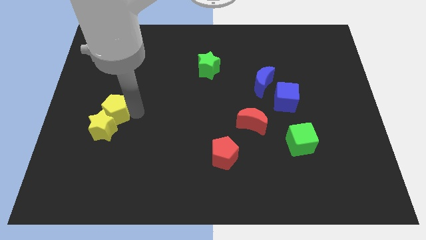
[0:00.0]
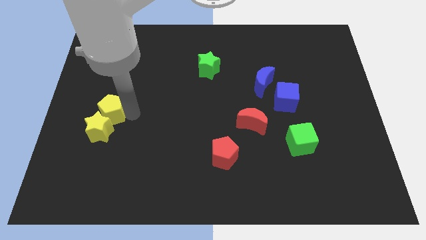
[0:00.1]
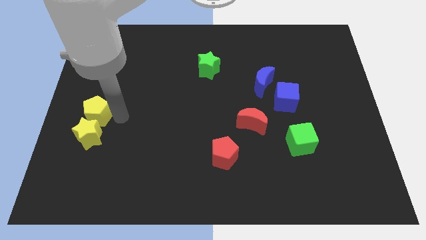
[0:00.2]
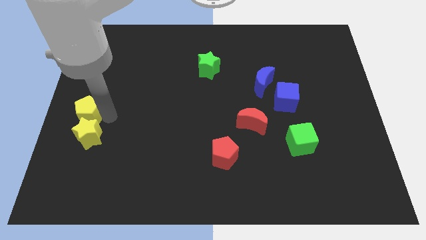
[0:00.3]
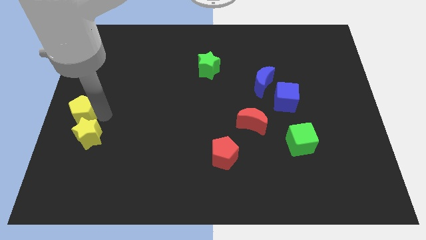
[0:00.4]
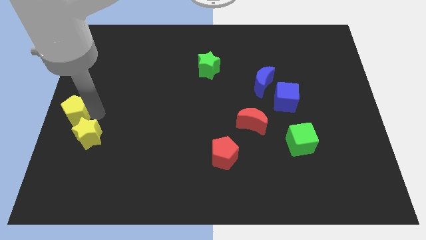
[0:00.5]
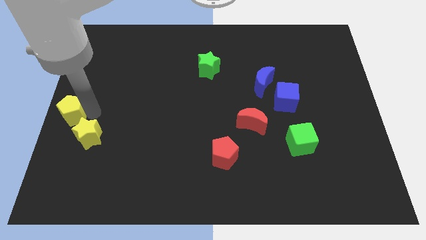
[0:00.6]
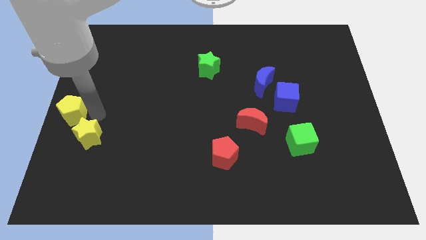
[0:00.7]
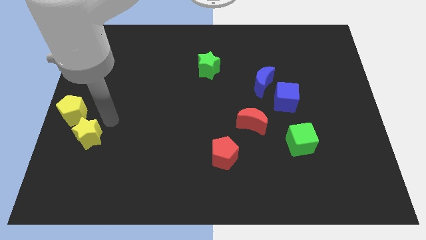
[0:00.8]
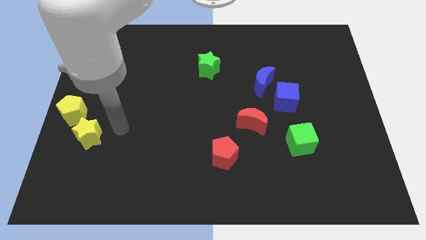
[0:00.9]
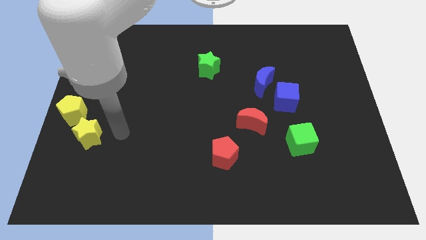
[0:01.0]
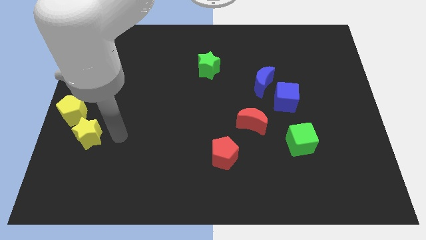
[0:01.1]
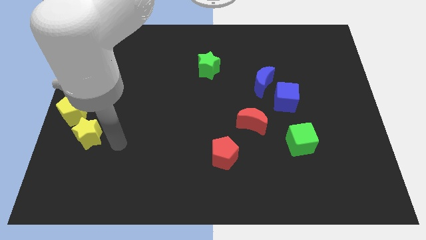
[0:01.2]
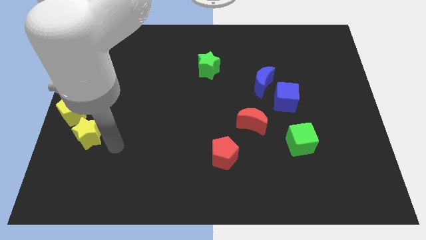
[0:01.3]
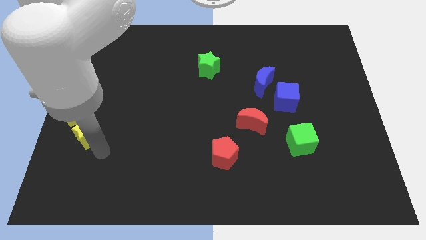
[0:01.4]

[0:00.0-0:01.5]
push the yellow pentagon to the left side center of the board

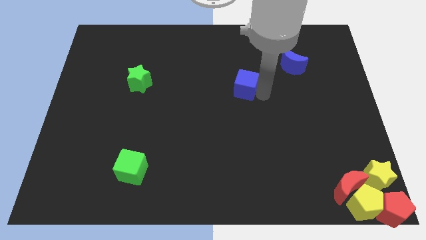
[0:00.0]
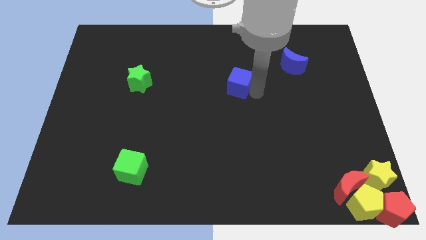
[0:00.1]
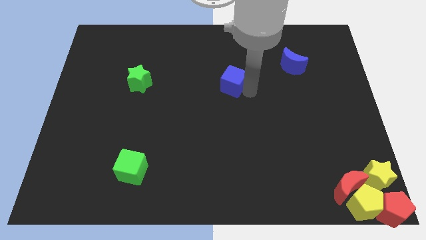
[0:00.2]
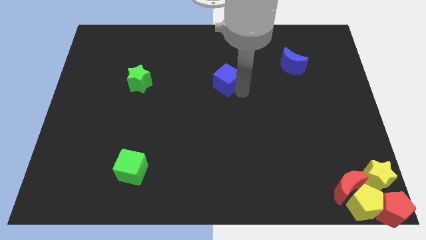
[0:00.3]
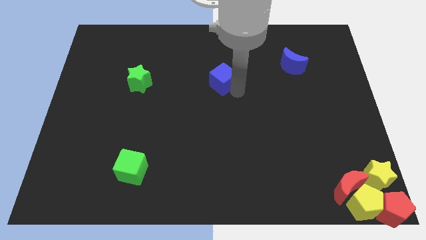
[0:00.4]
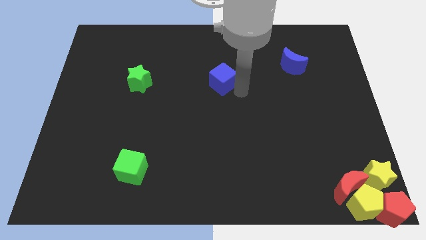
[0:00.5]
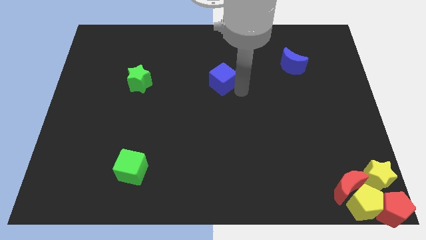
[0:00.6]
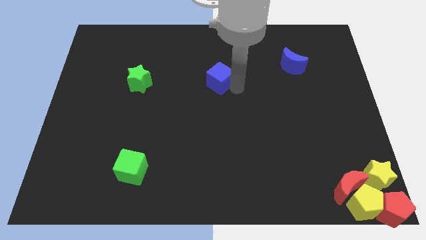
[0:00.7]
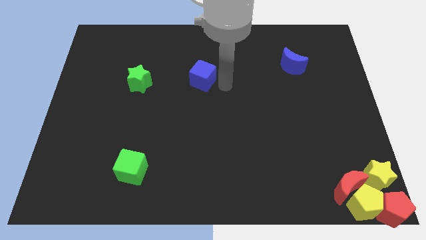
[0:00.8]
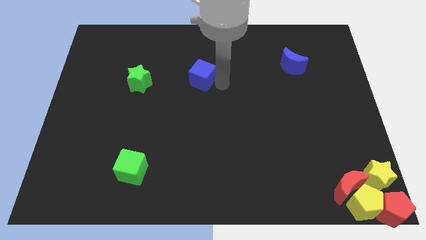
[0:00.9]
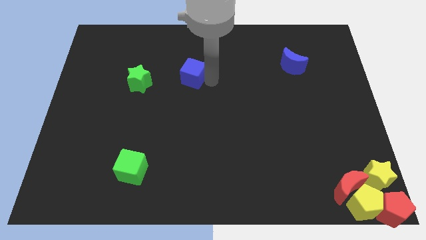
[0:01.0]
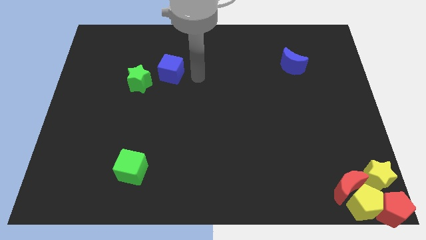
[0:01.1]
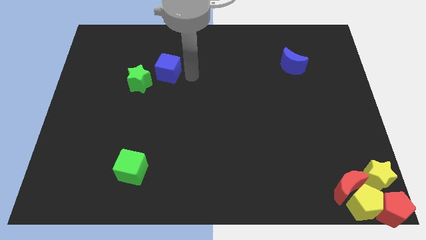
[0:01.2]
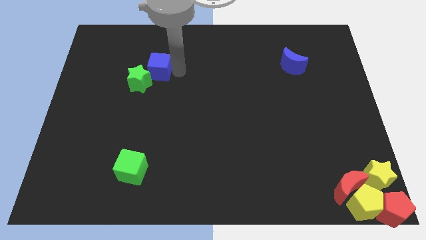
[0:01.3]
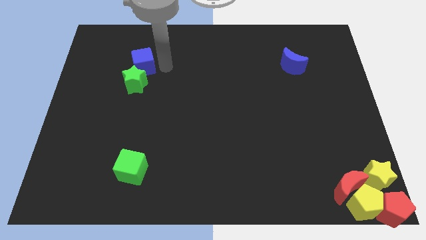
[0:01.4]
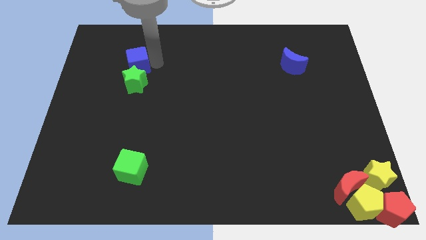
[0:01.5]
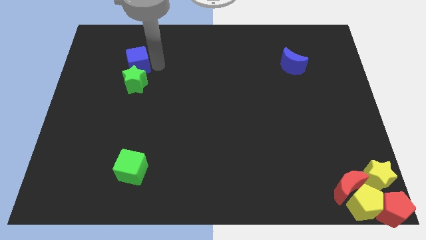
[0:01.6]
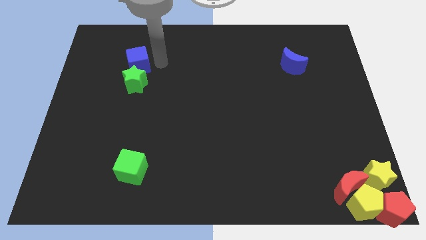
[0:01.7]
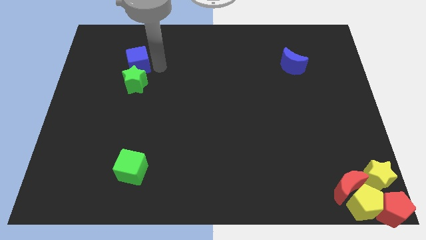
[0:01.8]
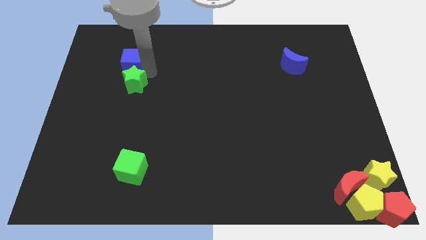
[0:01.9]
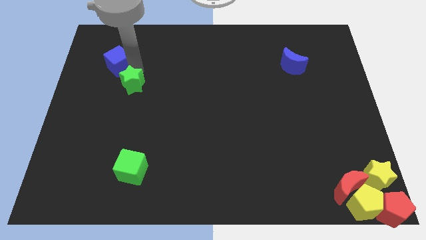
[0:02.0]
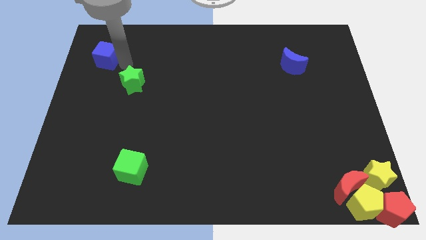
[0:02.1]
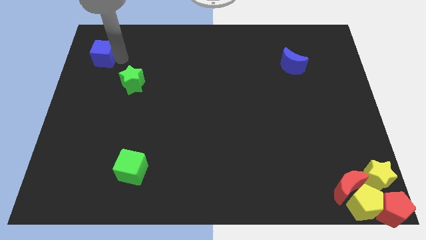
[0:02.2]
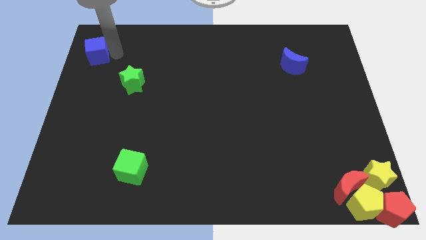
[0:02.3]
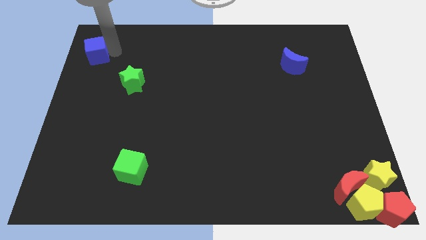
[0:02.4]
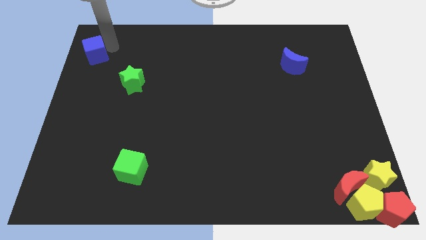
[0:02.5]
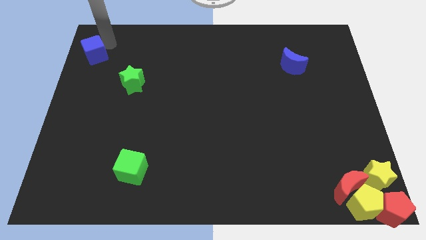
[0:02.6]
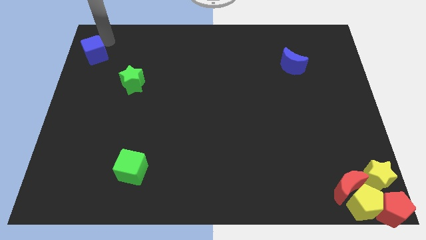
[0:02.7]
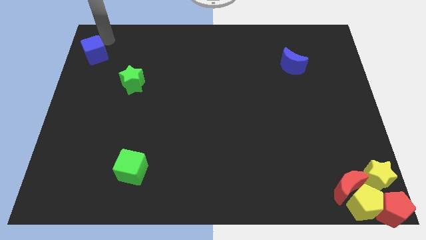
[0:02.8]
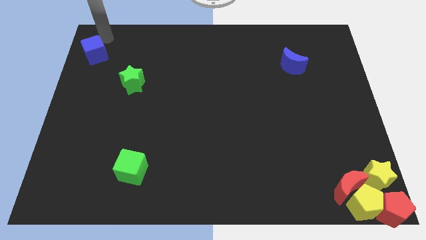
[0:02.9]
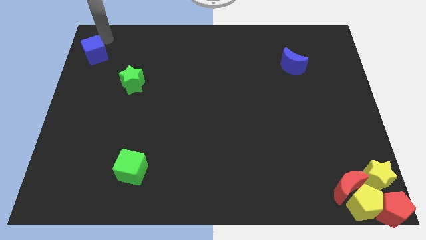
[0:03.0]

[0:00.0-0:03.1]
place the blue cube at the top left corner of the board

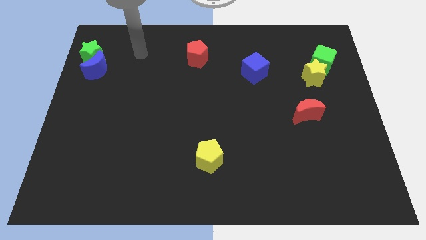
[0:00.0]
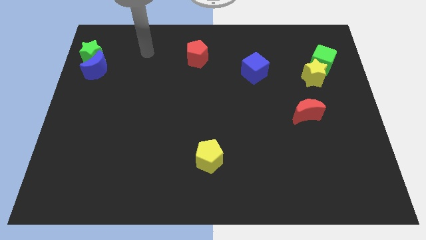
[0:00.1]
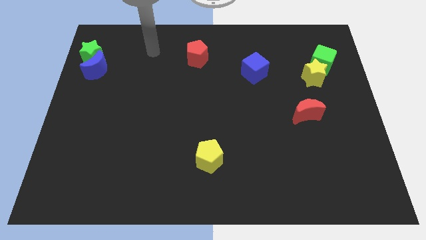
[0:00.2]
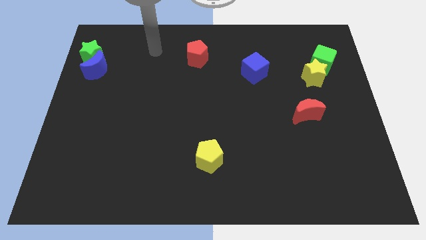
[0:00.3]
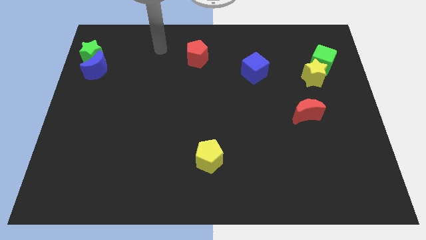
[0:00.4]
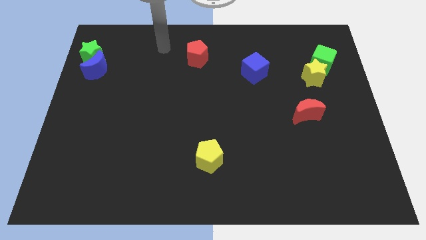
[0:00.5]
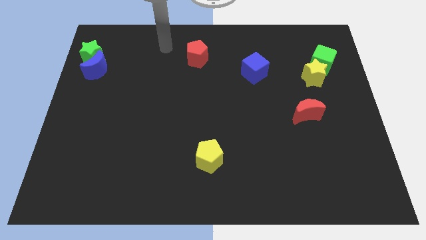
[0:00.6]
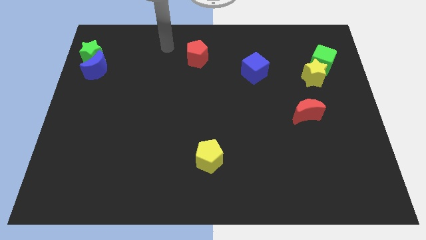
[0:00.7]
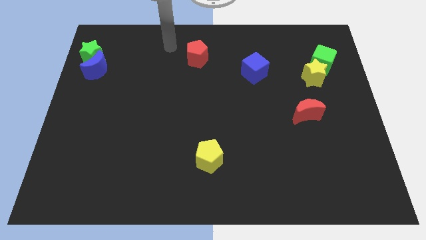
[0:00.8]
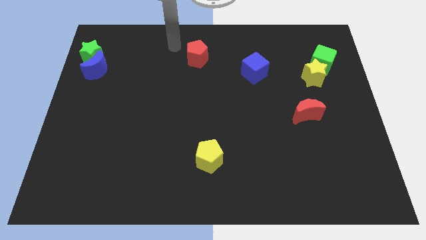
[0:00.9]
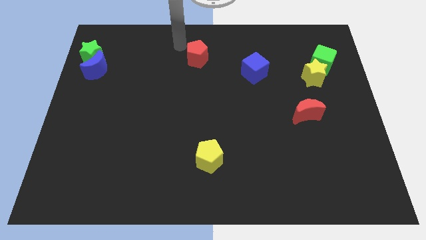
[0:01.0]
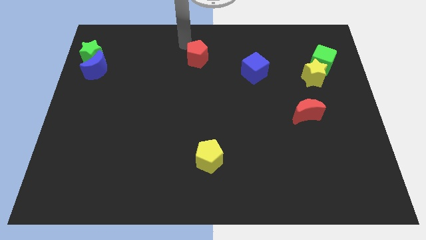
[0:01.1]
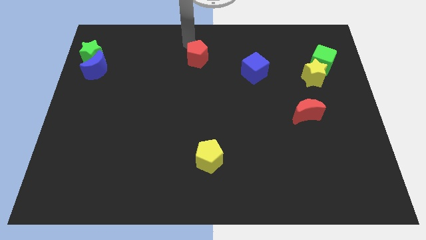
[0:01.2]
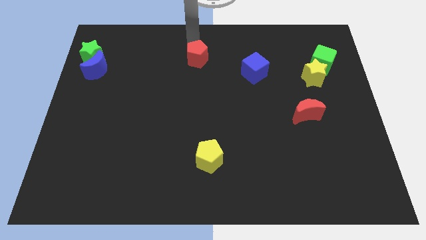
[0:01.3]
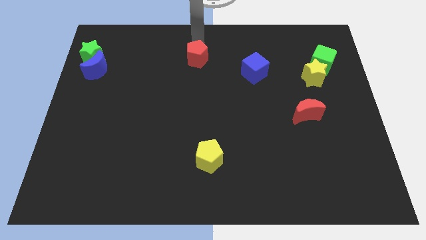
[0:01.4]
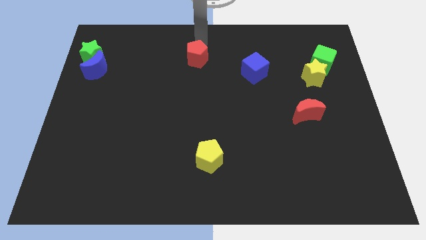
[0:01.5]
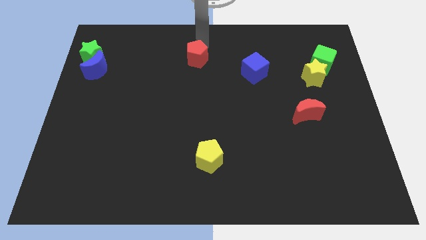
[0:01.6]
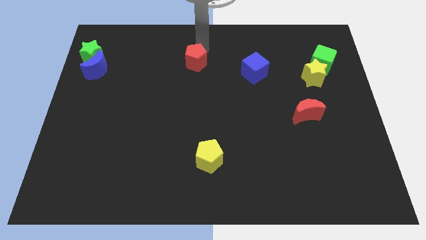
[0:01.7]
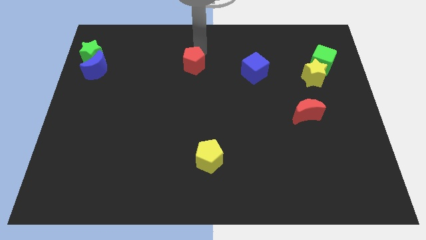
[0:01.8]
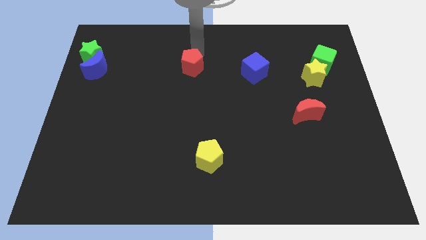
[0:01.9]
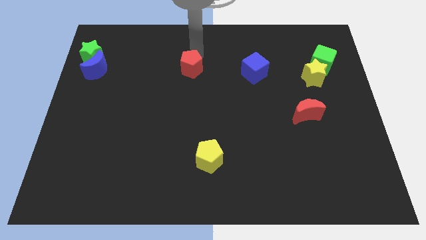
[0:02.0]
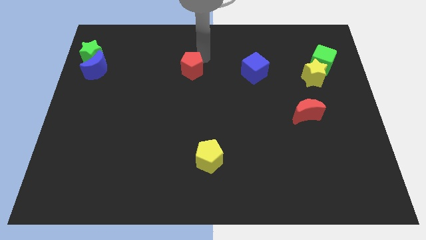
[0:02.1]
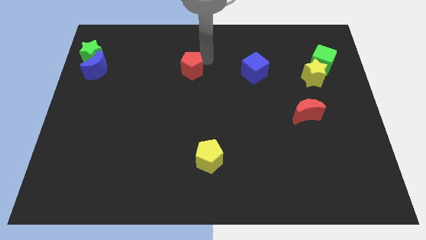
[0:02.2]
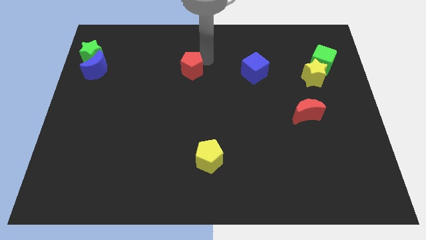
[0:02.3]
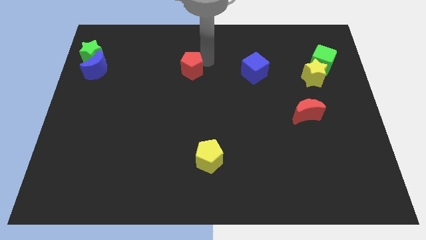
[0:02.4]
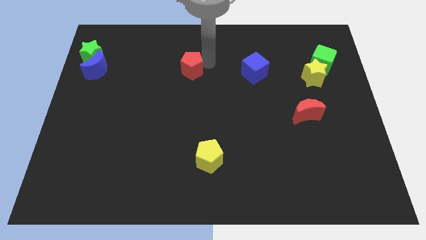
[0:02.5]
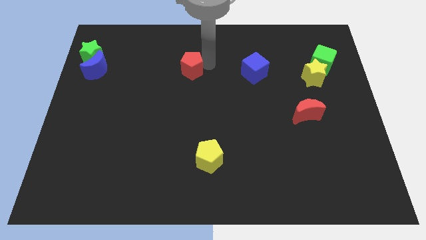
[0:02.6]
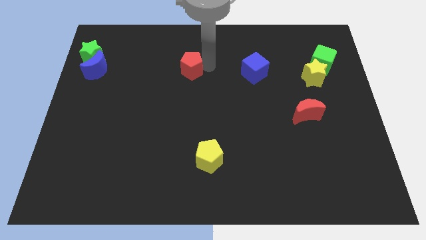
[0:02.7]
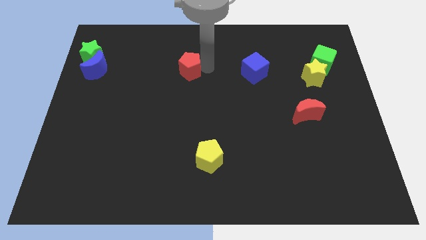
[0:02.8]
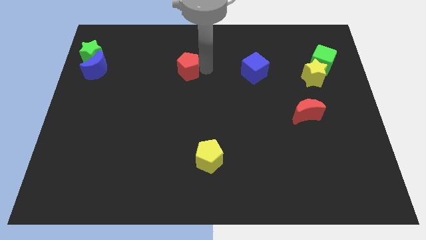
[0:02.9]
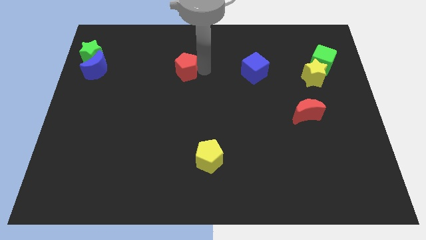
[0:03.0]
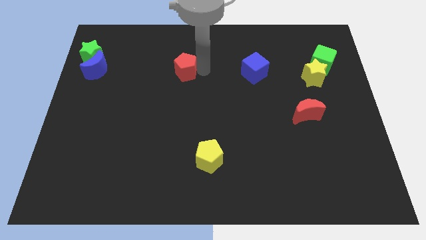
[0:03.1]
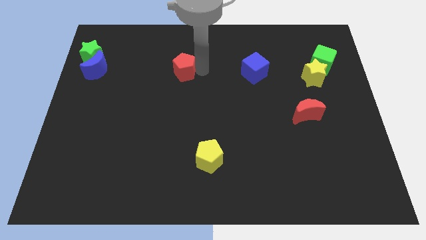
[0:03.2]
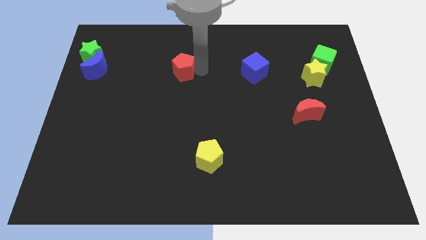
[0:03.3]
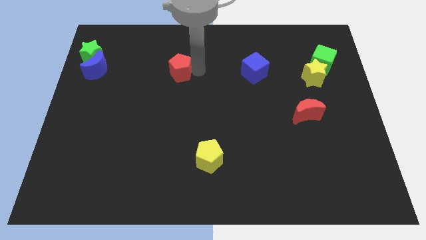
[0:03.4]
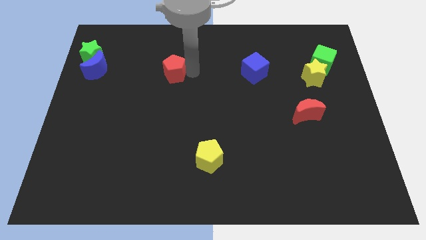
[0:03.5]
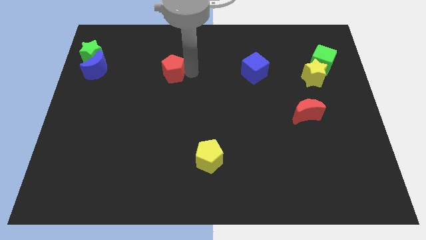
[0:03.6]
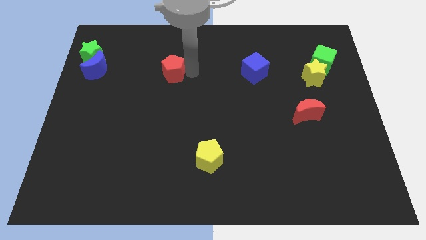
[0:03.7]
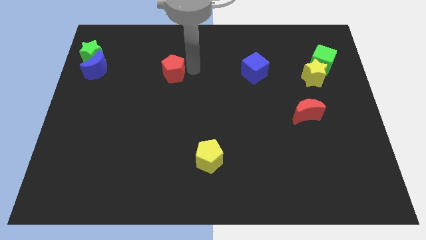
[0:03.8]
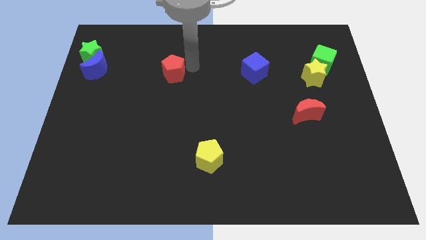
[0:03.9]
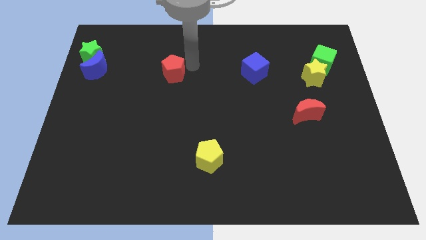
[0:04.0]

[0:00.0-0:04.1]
move the red pentagon in between the blue cube and blue crescent

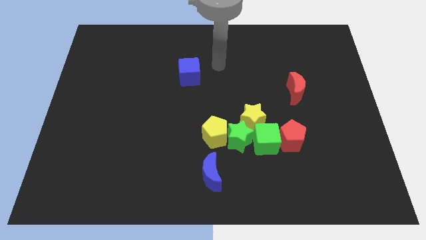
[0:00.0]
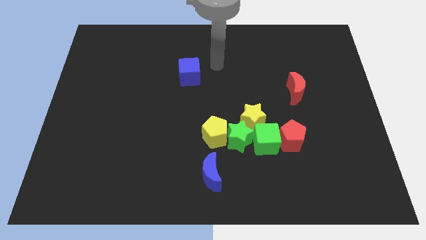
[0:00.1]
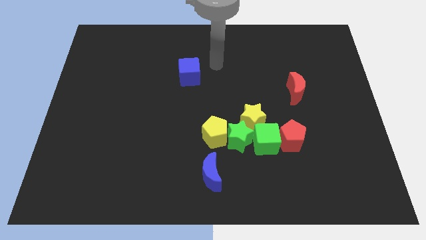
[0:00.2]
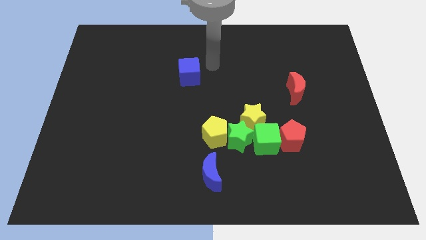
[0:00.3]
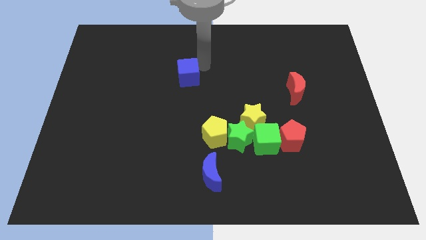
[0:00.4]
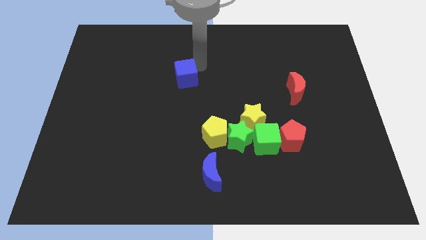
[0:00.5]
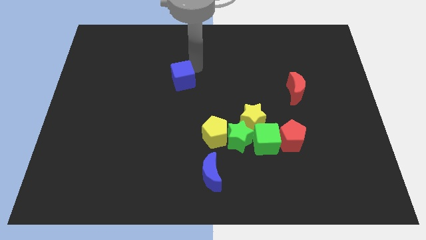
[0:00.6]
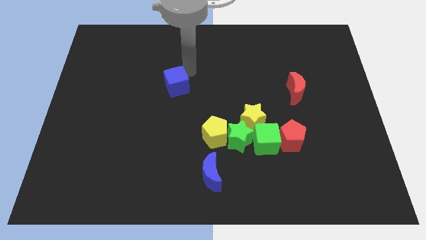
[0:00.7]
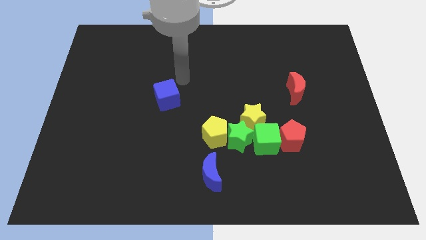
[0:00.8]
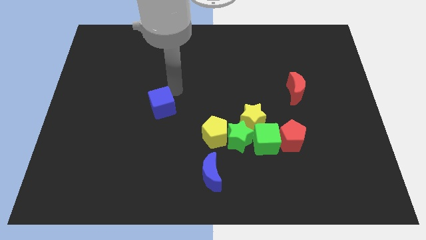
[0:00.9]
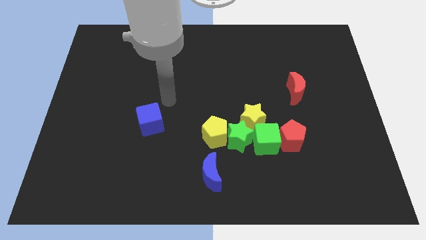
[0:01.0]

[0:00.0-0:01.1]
push the blue cube towards down
